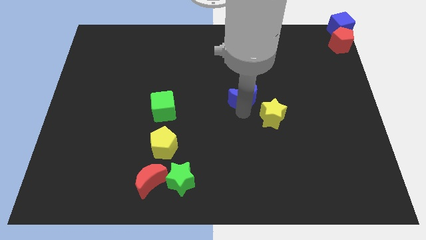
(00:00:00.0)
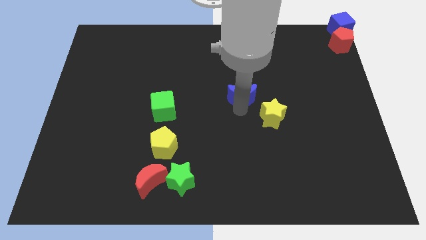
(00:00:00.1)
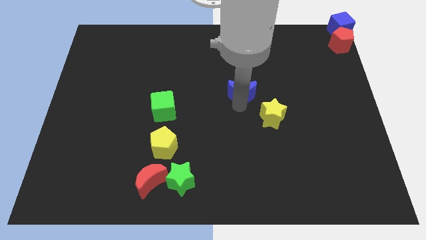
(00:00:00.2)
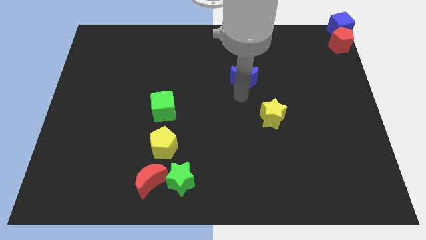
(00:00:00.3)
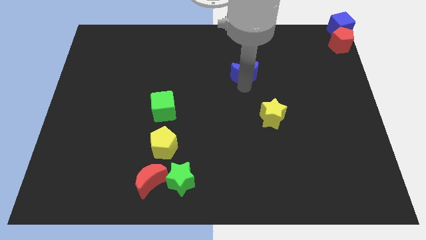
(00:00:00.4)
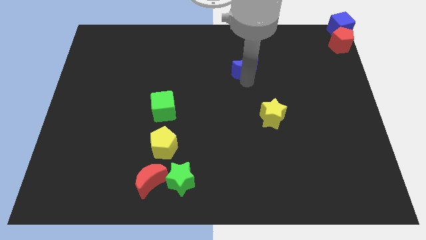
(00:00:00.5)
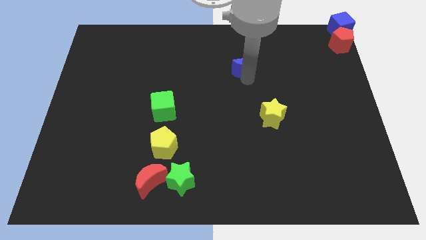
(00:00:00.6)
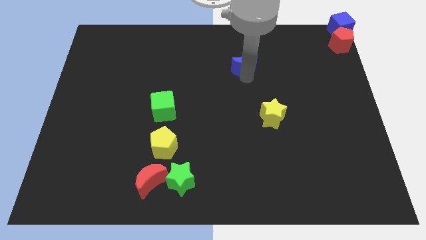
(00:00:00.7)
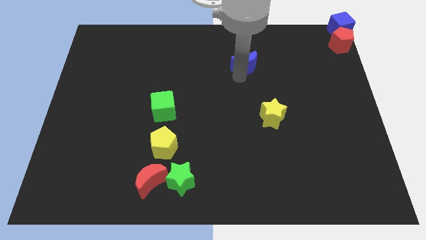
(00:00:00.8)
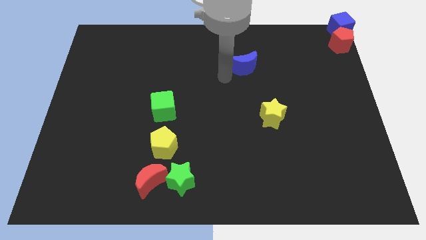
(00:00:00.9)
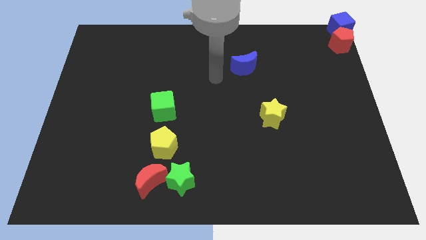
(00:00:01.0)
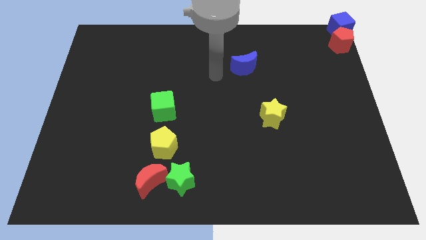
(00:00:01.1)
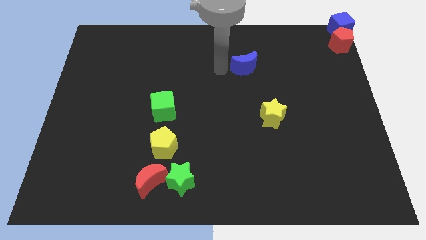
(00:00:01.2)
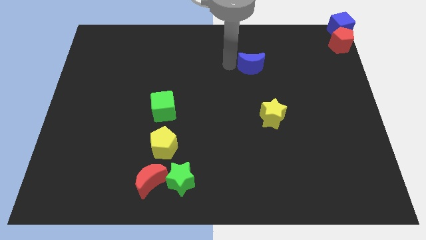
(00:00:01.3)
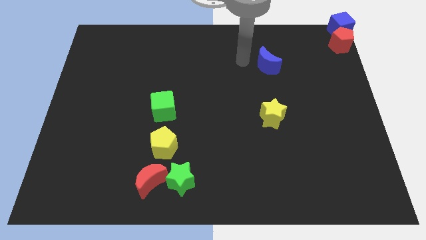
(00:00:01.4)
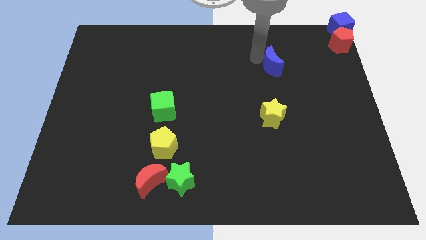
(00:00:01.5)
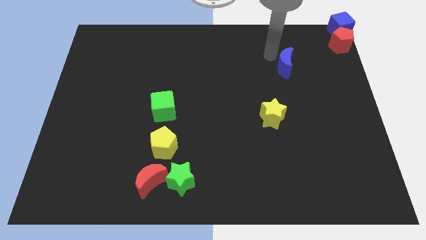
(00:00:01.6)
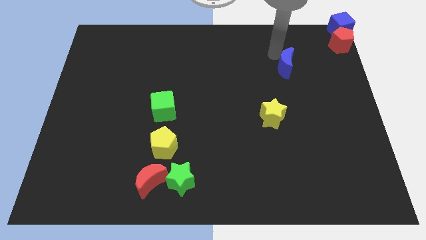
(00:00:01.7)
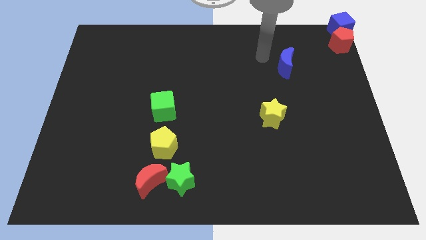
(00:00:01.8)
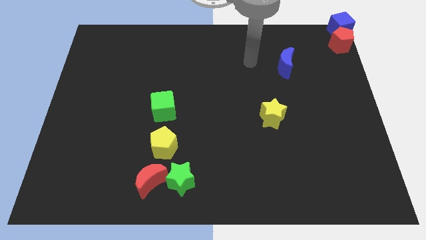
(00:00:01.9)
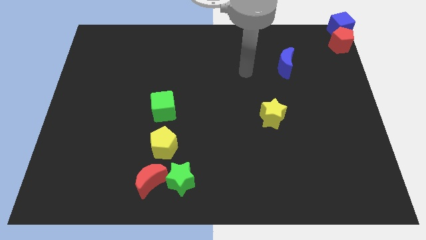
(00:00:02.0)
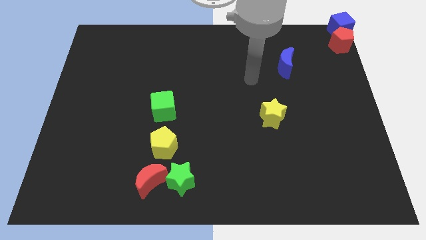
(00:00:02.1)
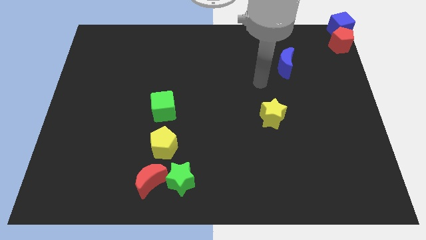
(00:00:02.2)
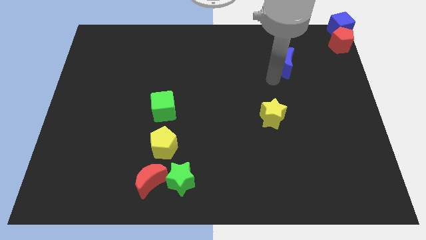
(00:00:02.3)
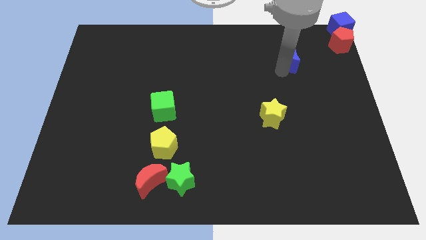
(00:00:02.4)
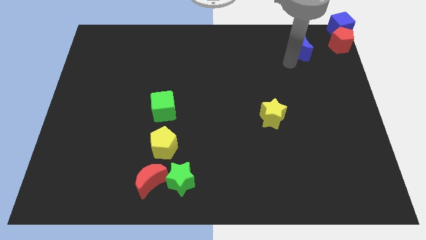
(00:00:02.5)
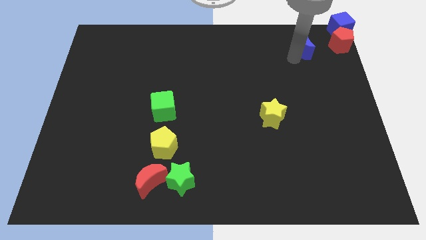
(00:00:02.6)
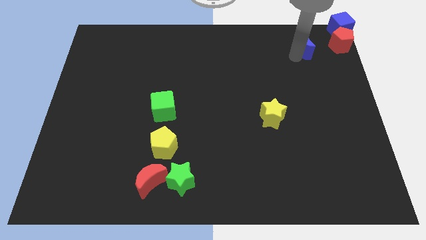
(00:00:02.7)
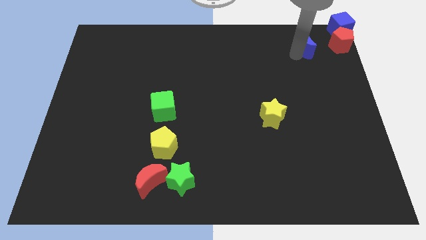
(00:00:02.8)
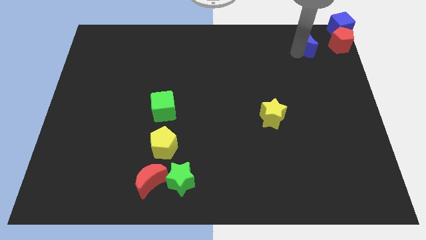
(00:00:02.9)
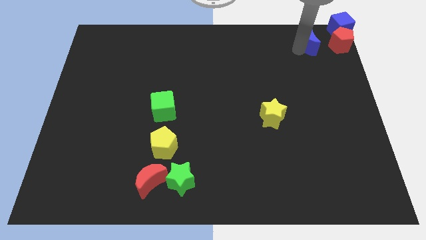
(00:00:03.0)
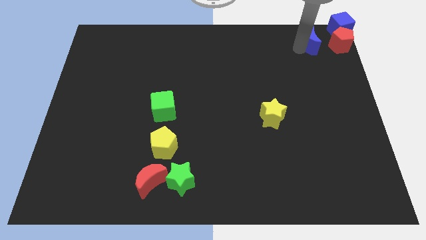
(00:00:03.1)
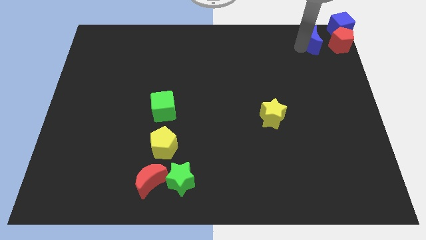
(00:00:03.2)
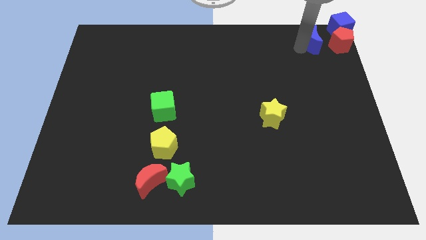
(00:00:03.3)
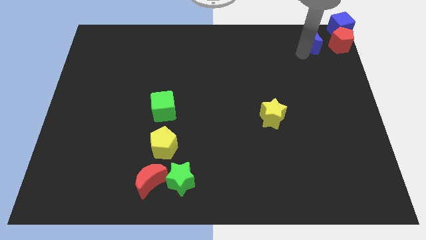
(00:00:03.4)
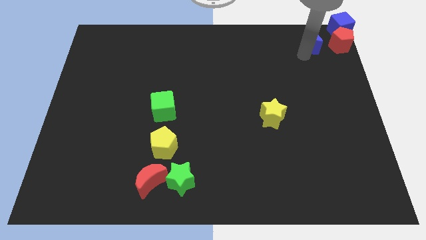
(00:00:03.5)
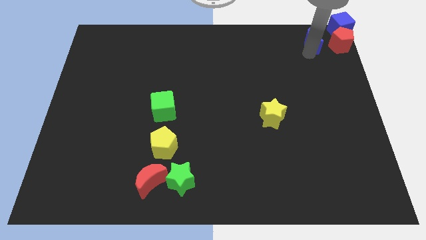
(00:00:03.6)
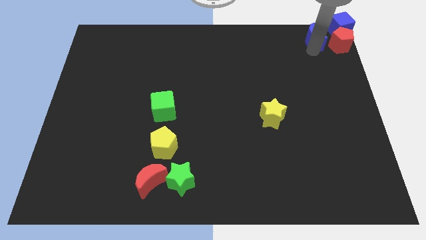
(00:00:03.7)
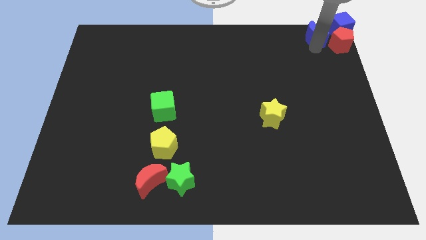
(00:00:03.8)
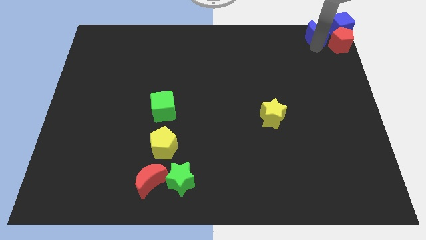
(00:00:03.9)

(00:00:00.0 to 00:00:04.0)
move the blue crescent to the left of the red pentagon

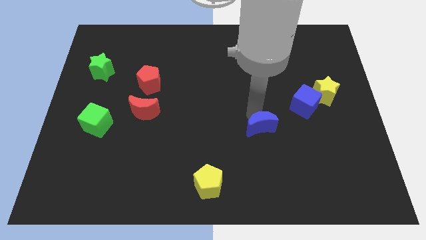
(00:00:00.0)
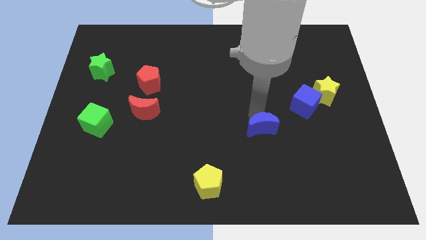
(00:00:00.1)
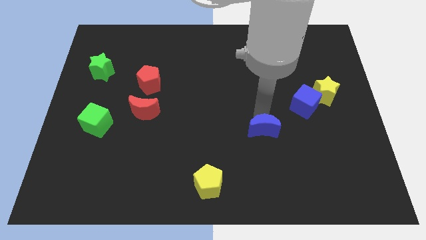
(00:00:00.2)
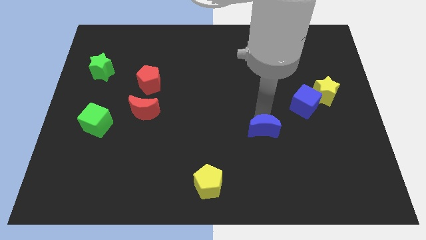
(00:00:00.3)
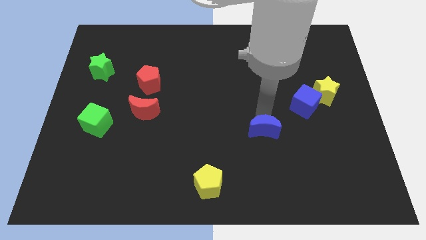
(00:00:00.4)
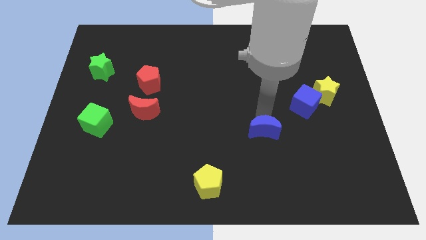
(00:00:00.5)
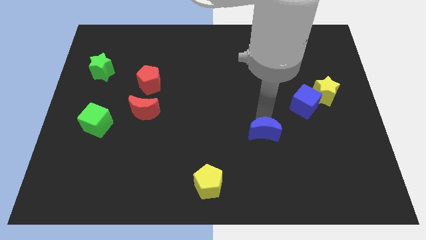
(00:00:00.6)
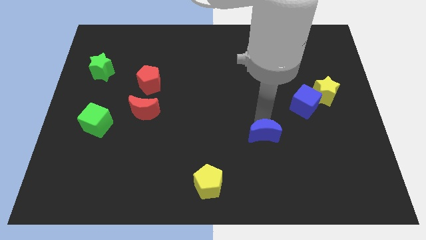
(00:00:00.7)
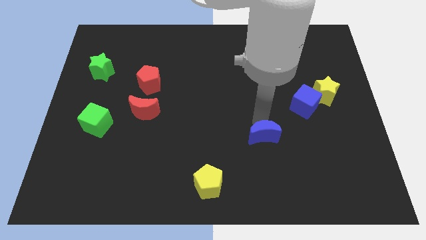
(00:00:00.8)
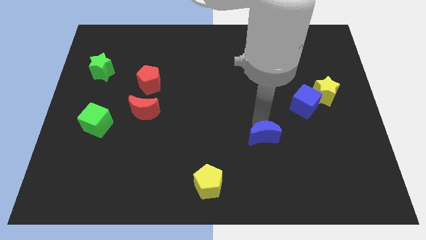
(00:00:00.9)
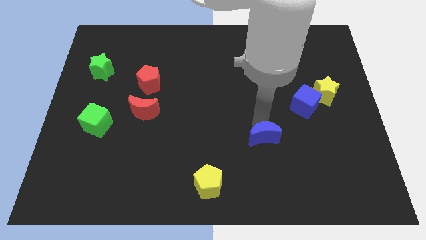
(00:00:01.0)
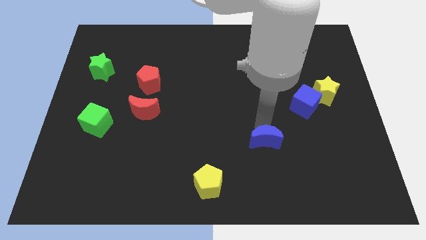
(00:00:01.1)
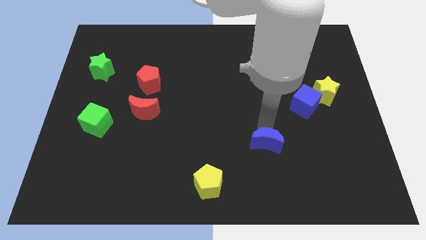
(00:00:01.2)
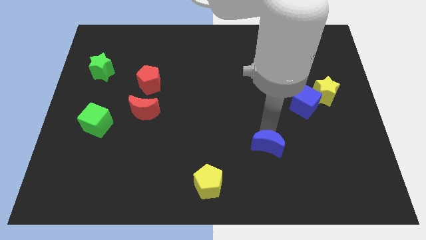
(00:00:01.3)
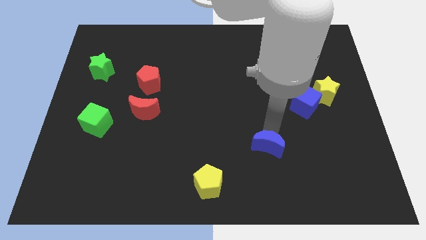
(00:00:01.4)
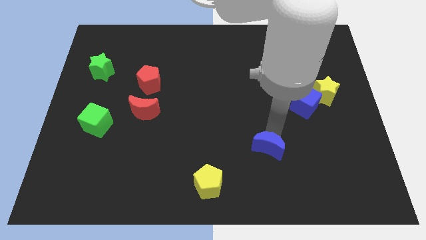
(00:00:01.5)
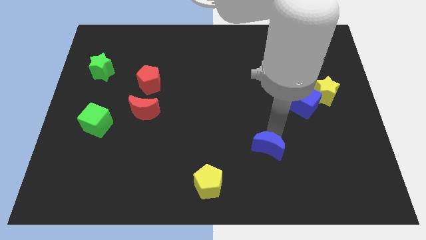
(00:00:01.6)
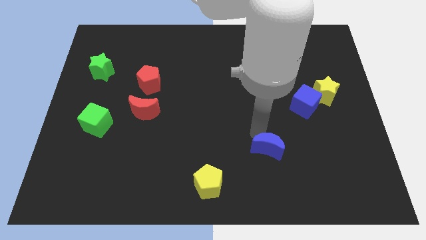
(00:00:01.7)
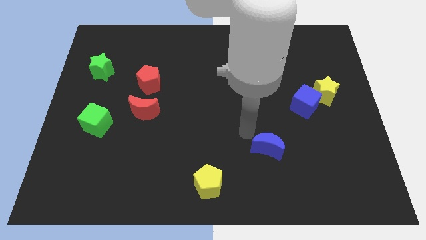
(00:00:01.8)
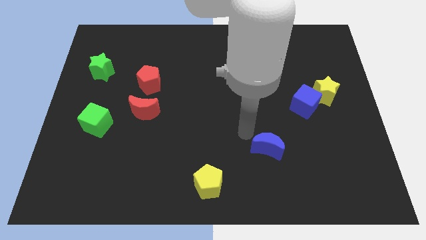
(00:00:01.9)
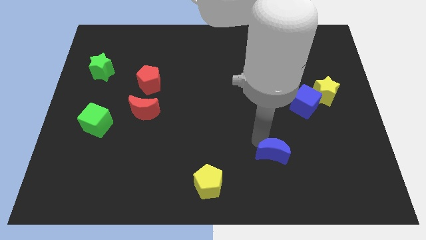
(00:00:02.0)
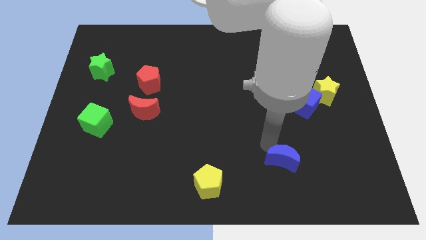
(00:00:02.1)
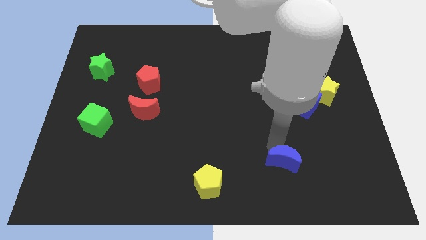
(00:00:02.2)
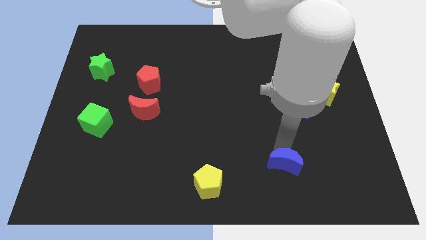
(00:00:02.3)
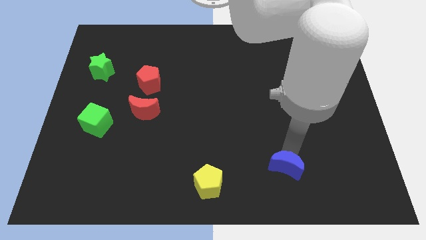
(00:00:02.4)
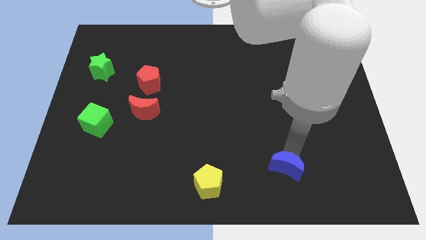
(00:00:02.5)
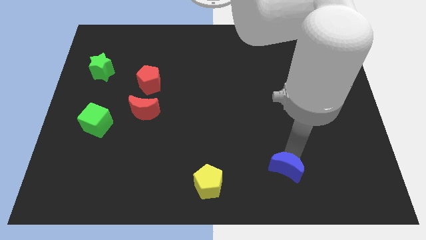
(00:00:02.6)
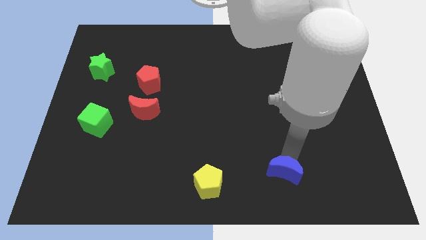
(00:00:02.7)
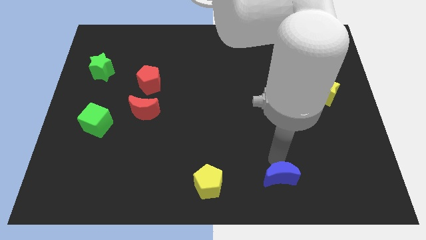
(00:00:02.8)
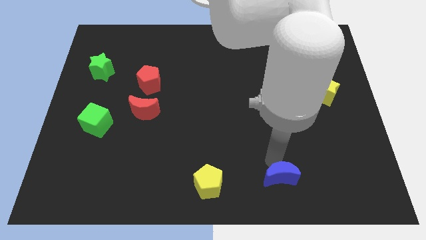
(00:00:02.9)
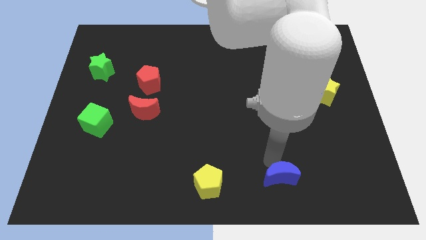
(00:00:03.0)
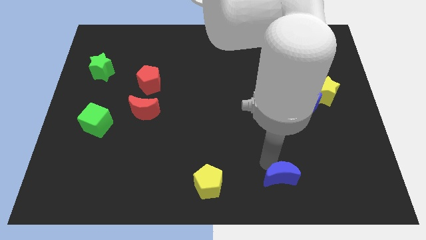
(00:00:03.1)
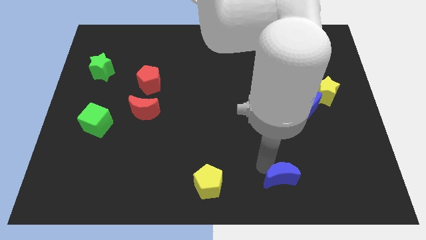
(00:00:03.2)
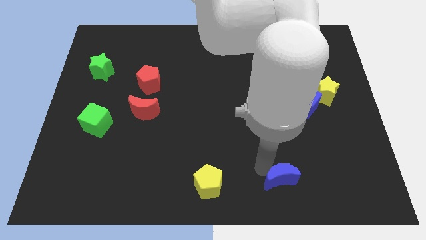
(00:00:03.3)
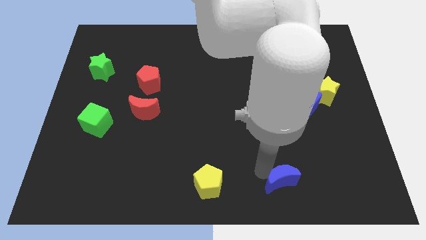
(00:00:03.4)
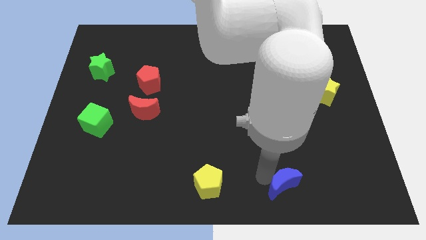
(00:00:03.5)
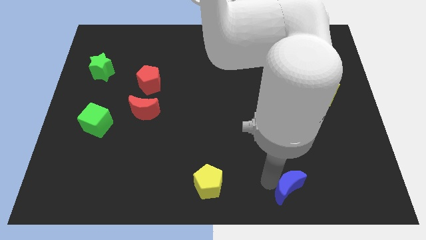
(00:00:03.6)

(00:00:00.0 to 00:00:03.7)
place blue moon parallel to yellow pentagon

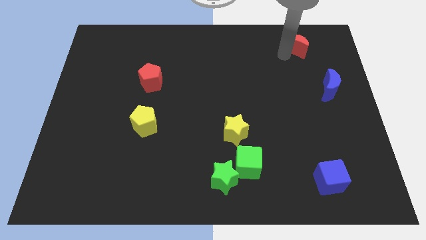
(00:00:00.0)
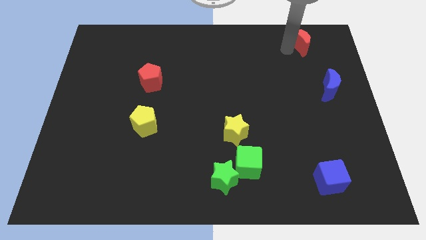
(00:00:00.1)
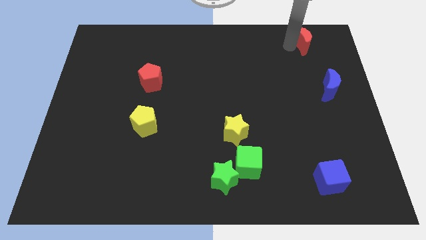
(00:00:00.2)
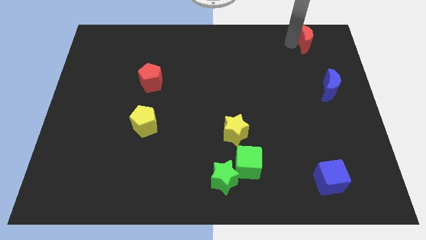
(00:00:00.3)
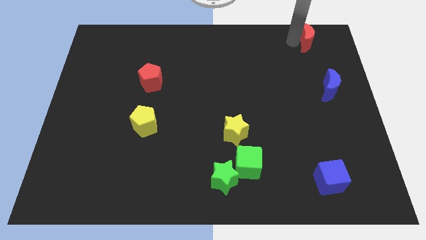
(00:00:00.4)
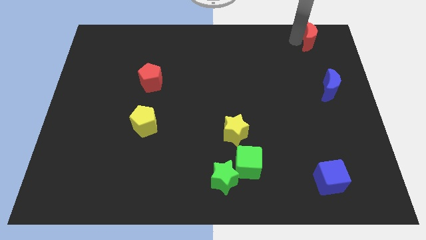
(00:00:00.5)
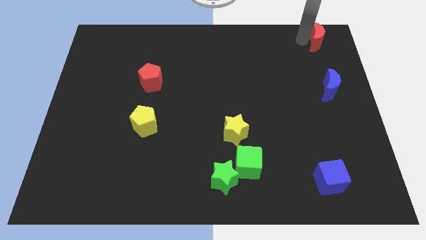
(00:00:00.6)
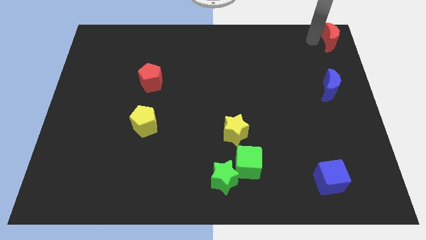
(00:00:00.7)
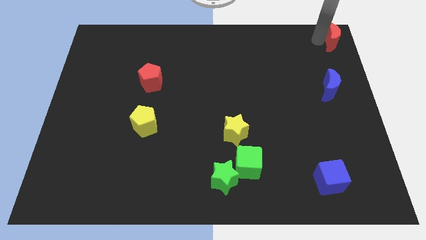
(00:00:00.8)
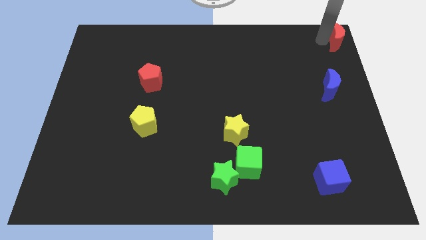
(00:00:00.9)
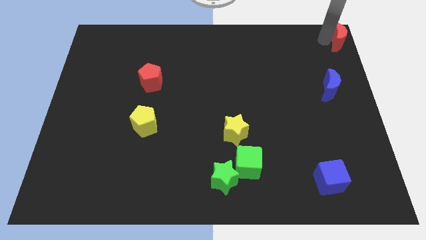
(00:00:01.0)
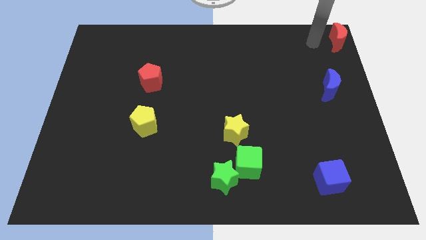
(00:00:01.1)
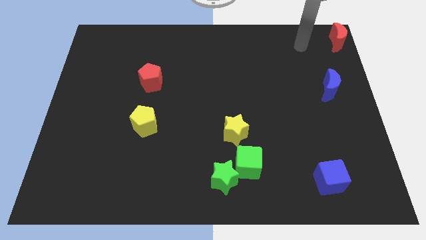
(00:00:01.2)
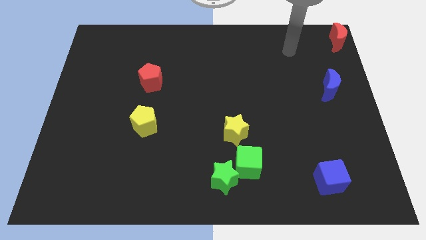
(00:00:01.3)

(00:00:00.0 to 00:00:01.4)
push red moon to the top right corner of the board
